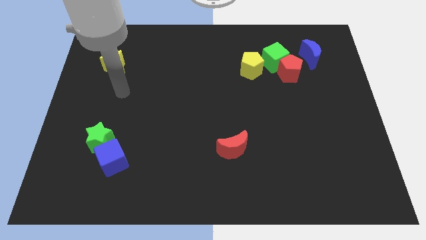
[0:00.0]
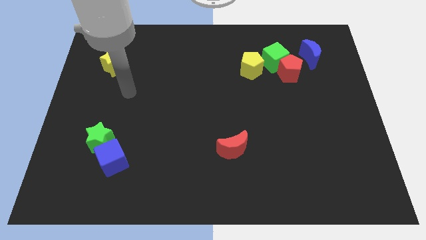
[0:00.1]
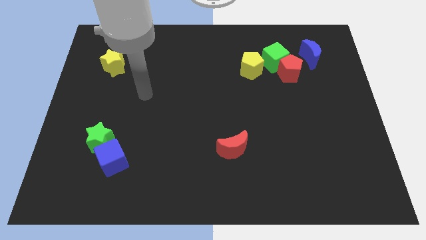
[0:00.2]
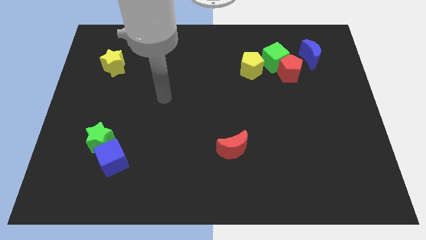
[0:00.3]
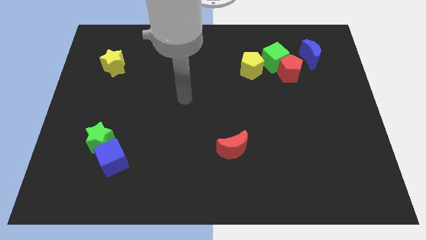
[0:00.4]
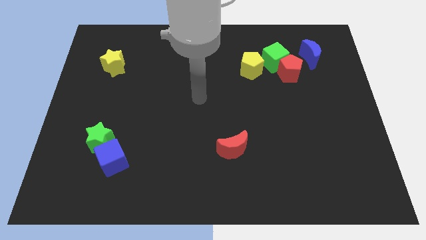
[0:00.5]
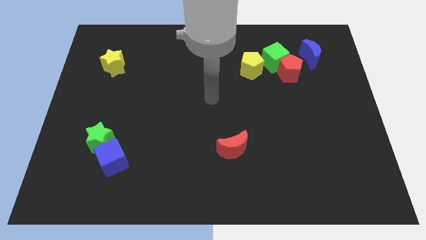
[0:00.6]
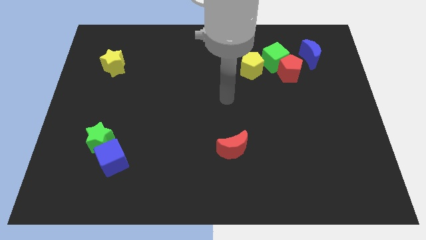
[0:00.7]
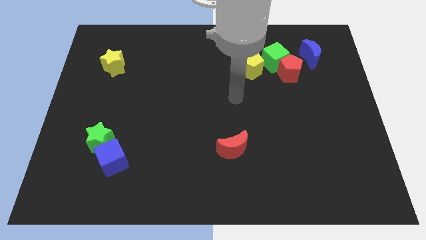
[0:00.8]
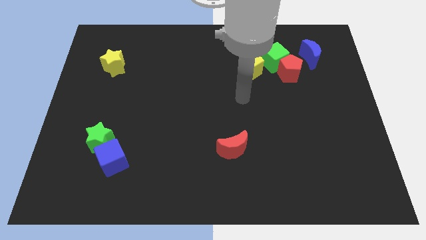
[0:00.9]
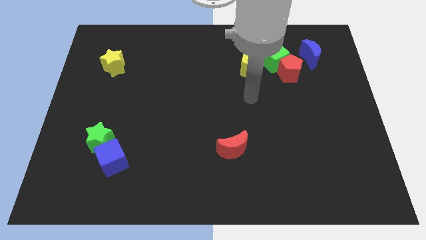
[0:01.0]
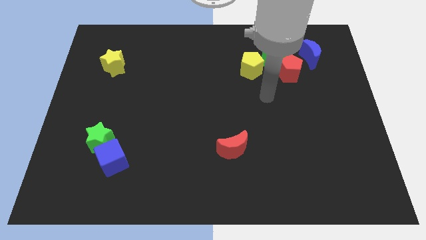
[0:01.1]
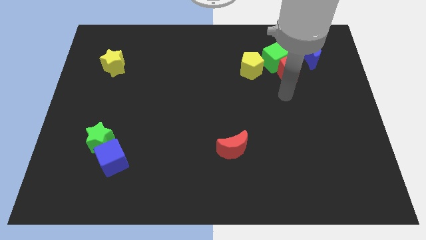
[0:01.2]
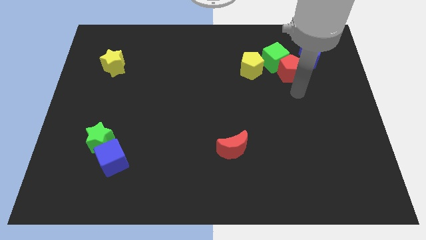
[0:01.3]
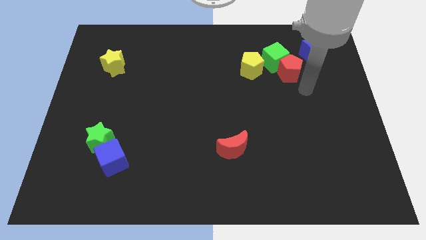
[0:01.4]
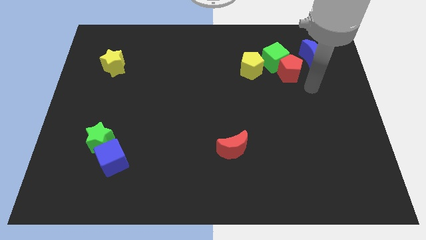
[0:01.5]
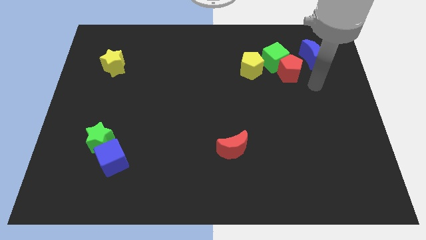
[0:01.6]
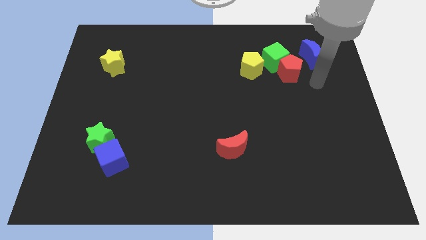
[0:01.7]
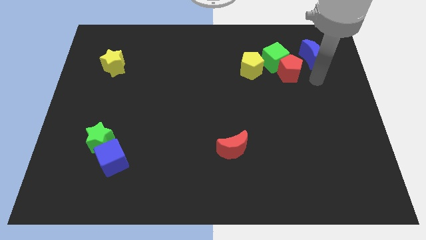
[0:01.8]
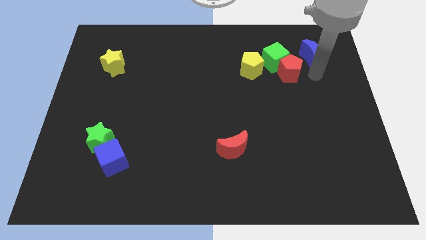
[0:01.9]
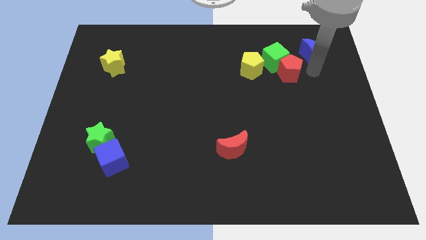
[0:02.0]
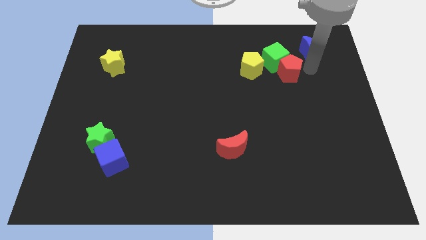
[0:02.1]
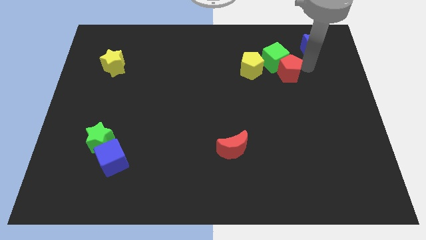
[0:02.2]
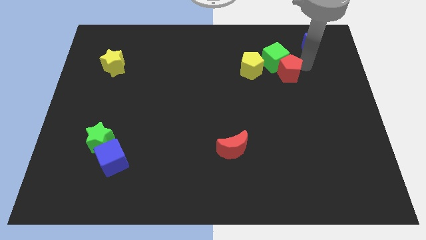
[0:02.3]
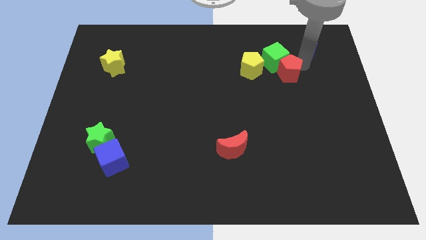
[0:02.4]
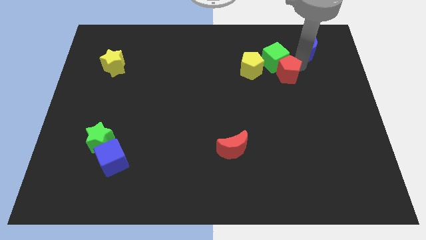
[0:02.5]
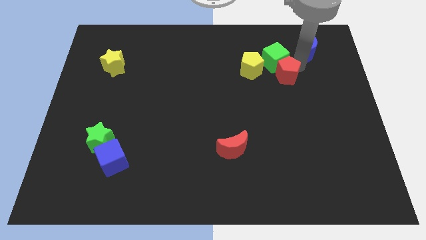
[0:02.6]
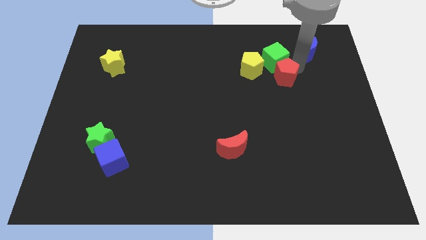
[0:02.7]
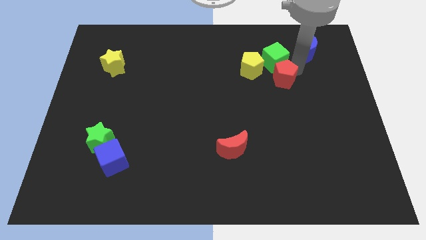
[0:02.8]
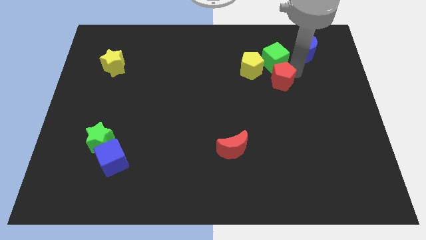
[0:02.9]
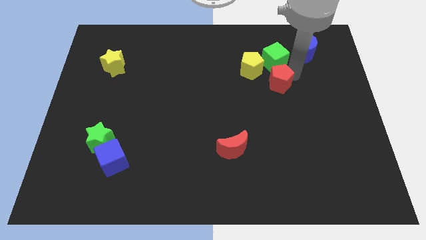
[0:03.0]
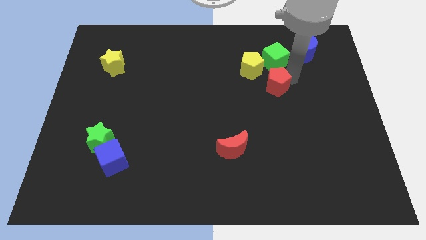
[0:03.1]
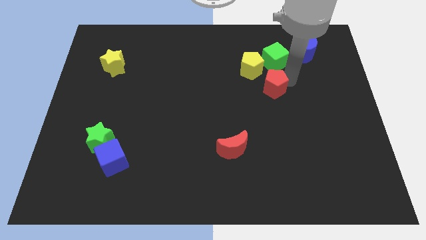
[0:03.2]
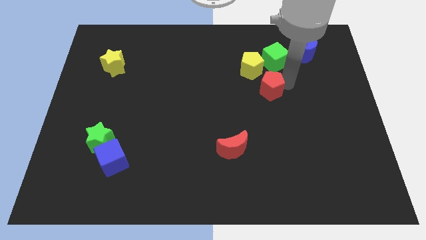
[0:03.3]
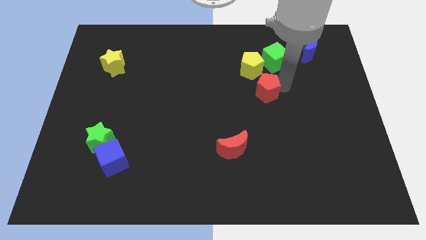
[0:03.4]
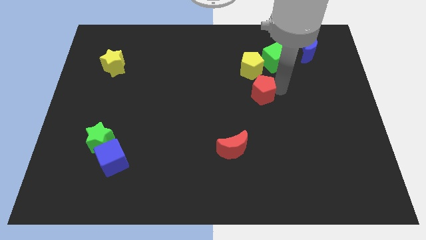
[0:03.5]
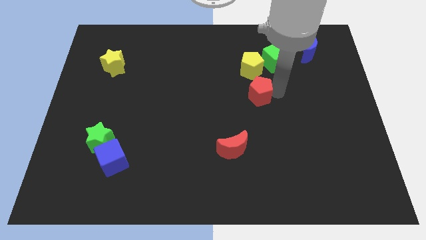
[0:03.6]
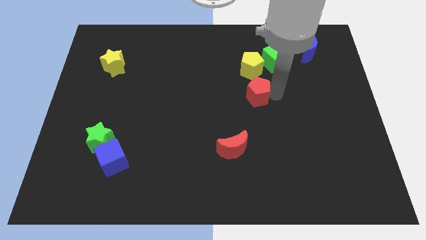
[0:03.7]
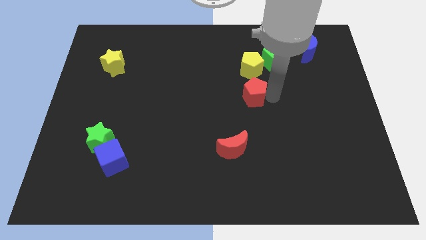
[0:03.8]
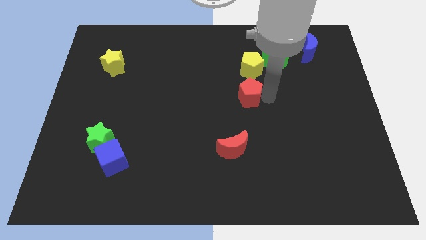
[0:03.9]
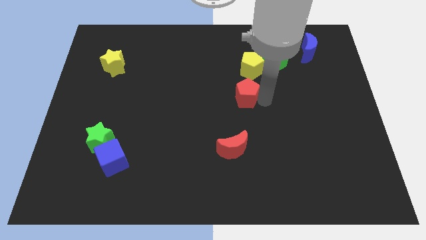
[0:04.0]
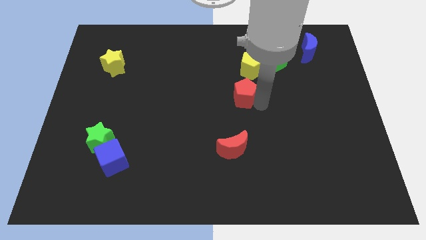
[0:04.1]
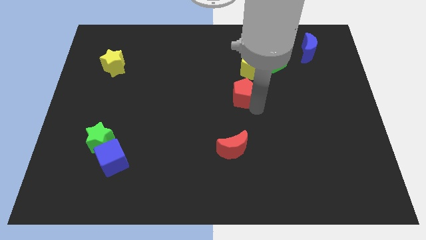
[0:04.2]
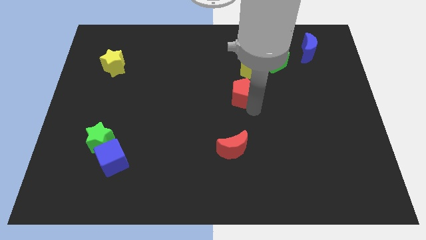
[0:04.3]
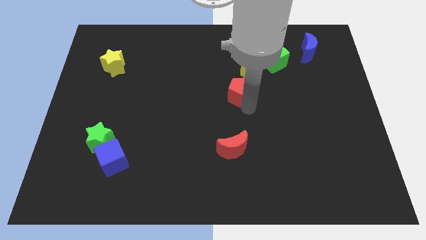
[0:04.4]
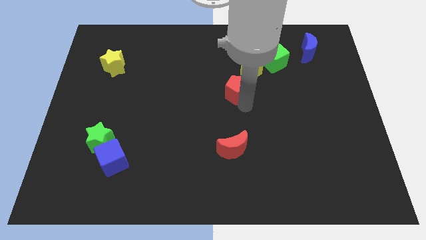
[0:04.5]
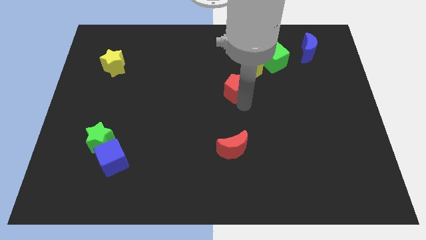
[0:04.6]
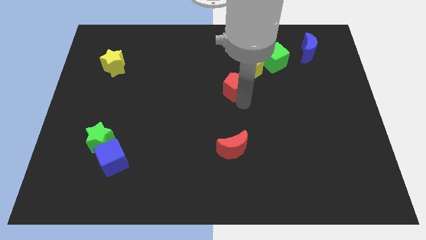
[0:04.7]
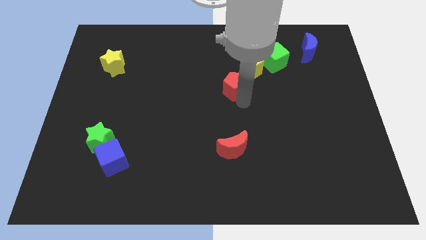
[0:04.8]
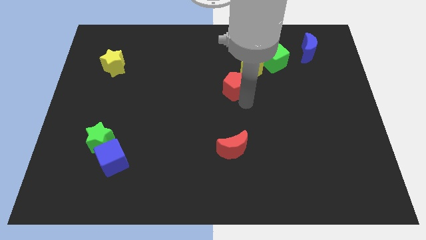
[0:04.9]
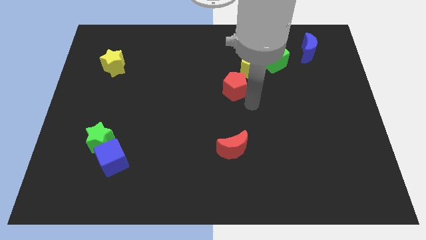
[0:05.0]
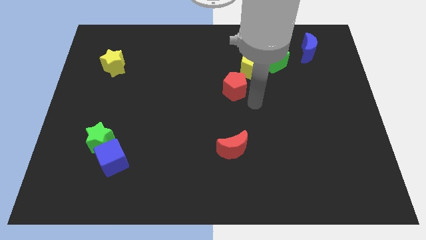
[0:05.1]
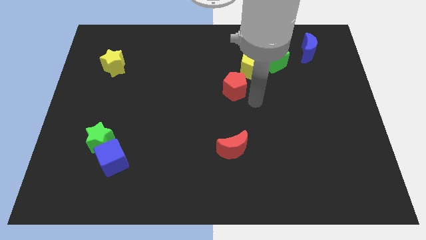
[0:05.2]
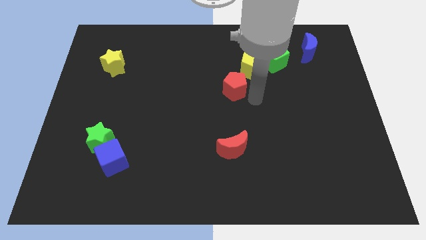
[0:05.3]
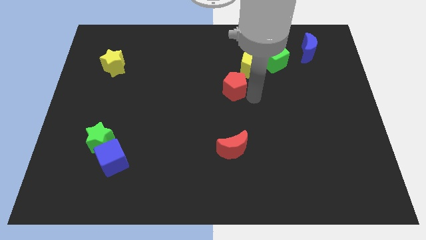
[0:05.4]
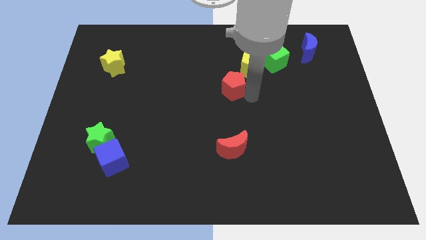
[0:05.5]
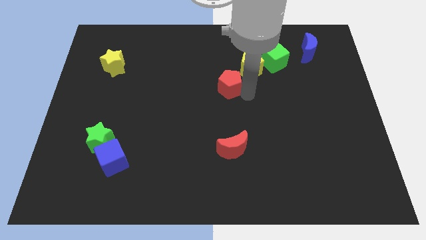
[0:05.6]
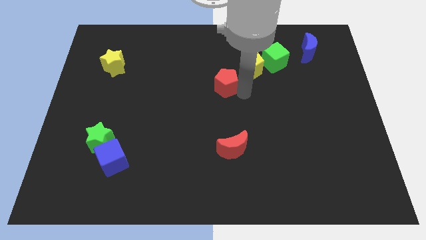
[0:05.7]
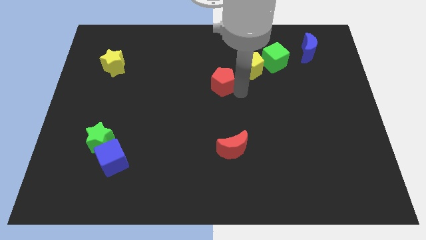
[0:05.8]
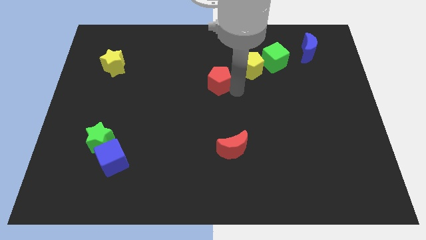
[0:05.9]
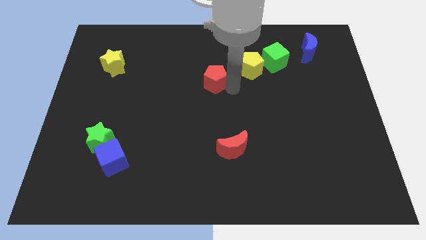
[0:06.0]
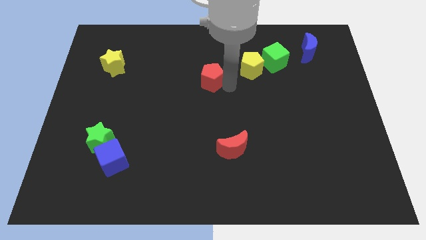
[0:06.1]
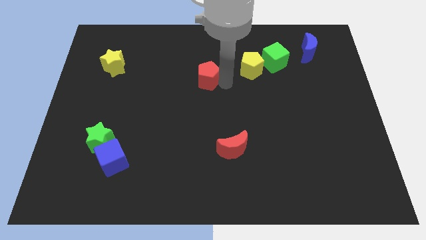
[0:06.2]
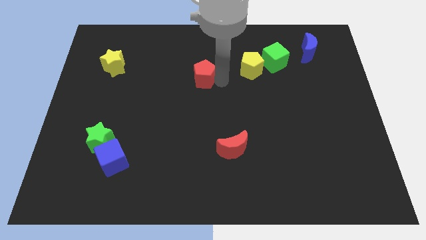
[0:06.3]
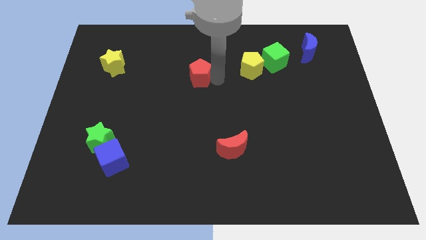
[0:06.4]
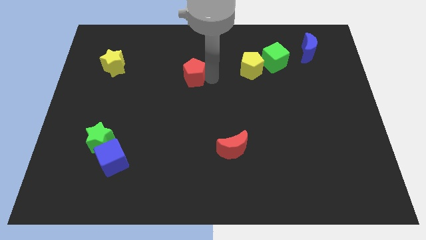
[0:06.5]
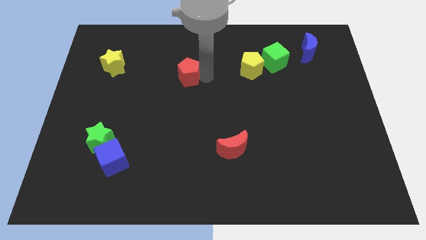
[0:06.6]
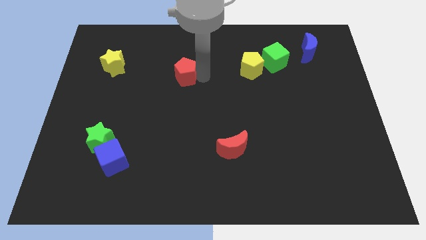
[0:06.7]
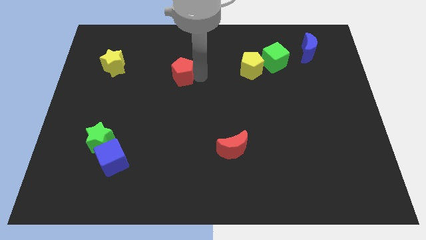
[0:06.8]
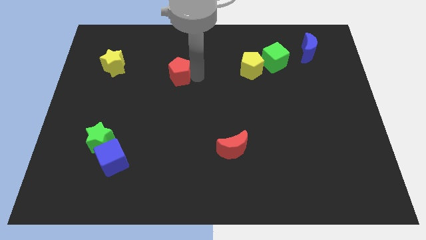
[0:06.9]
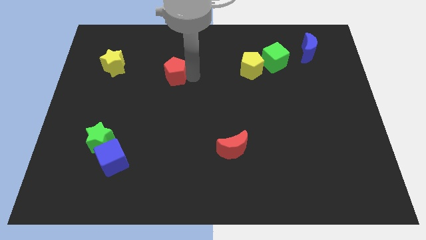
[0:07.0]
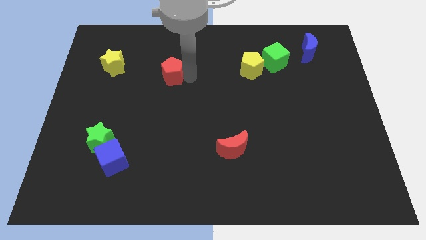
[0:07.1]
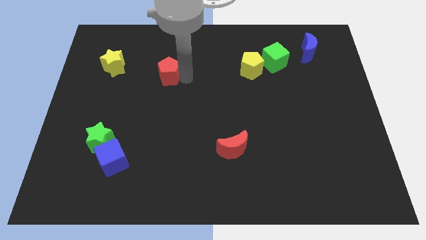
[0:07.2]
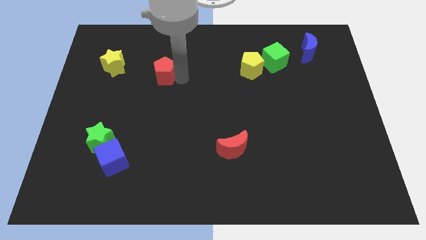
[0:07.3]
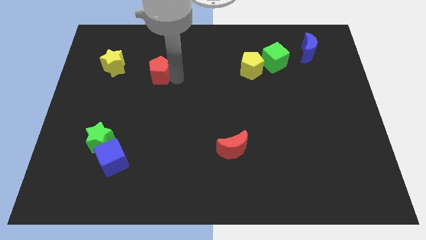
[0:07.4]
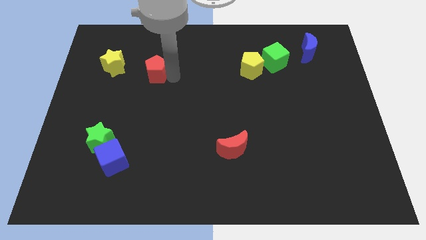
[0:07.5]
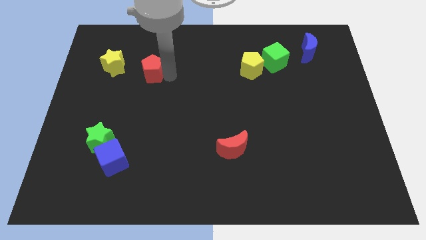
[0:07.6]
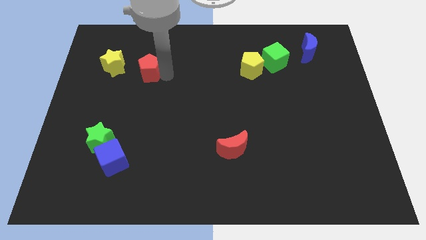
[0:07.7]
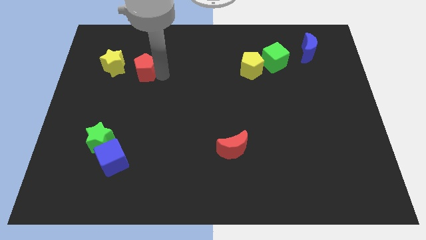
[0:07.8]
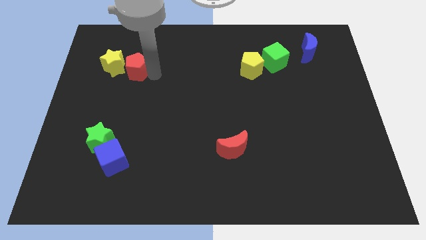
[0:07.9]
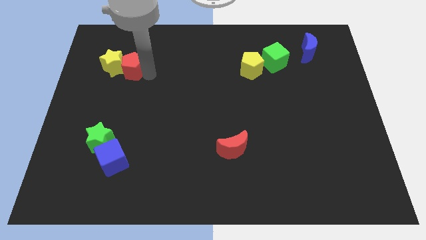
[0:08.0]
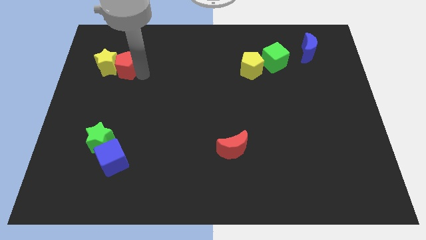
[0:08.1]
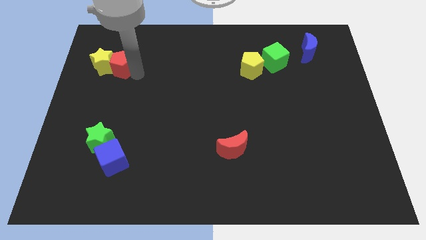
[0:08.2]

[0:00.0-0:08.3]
put the red pentagon next to the yellow star

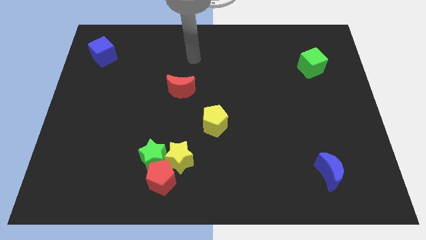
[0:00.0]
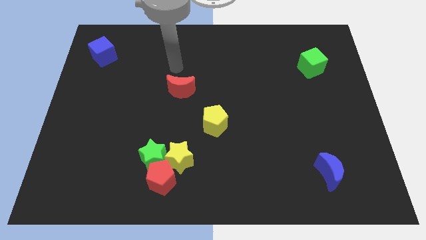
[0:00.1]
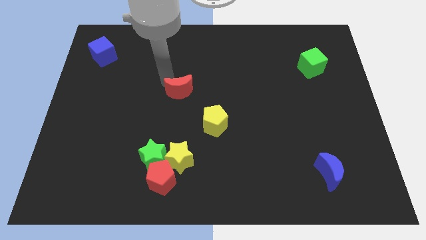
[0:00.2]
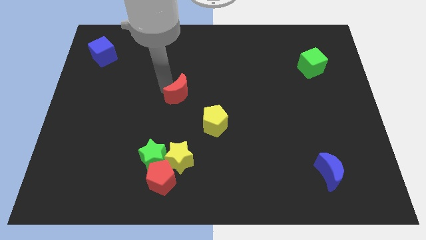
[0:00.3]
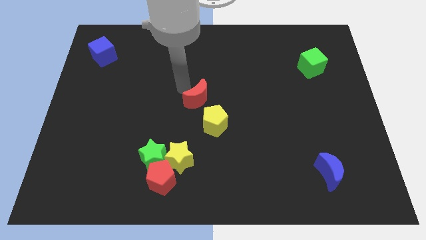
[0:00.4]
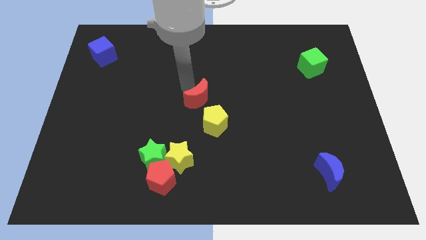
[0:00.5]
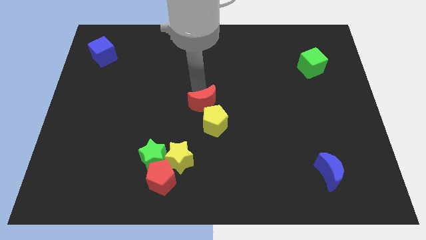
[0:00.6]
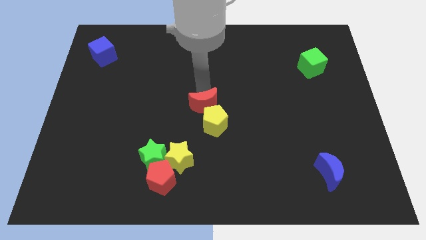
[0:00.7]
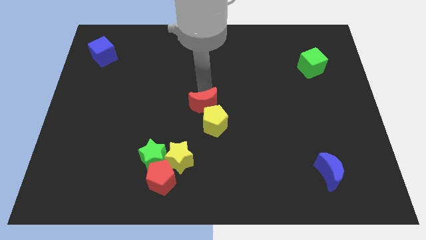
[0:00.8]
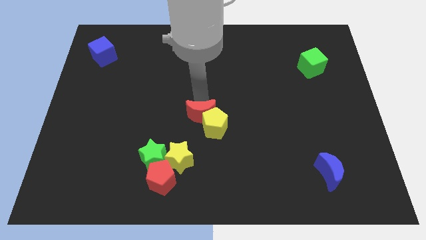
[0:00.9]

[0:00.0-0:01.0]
push the red moon close to the yellow pentagon
